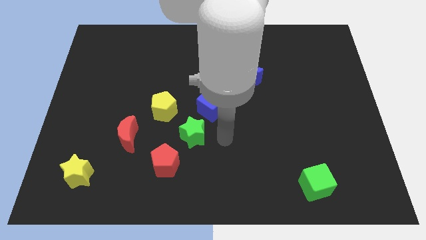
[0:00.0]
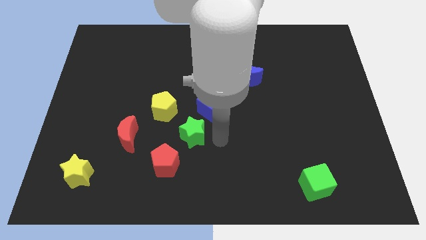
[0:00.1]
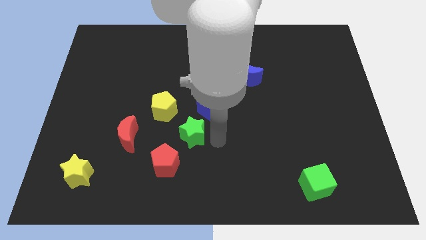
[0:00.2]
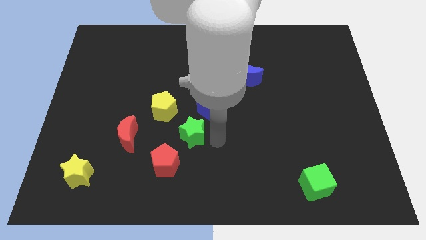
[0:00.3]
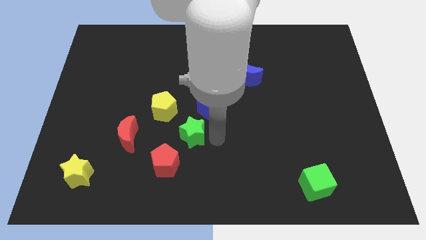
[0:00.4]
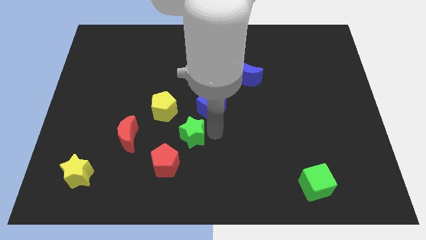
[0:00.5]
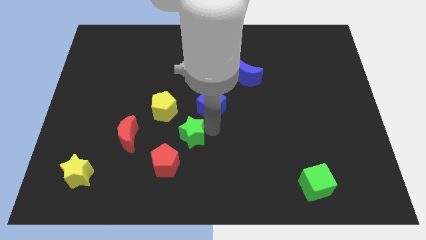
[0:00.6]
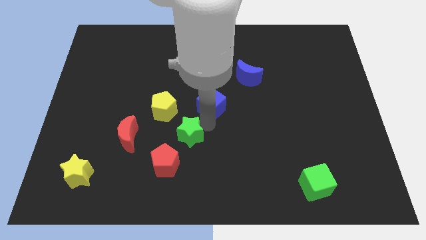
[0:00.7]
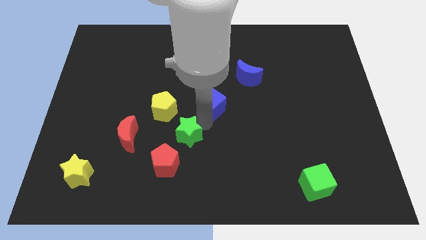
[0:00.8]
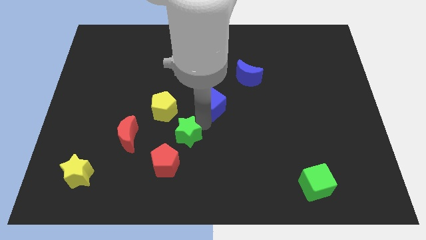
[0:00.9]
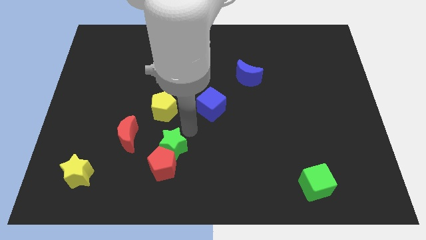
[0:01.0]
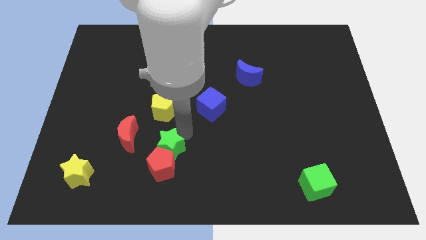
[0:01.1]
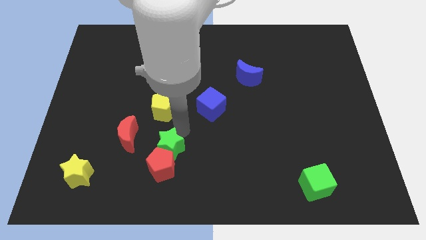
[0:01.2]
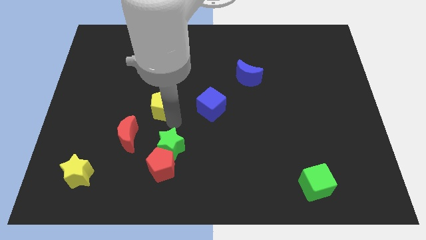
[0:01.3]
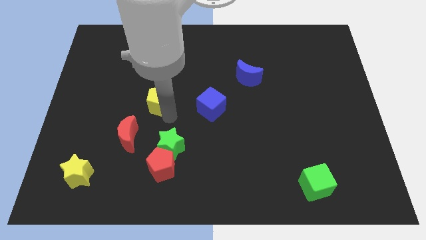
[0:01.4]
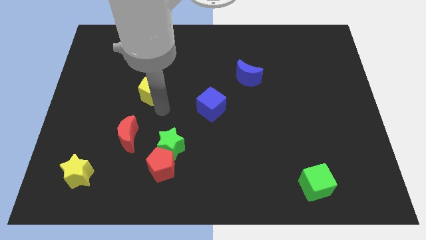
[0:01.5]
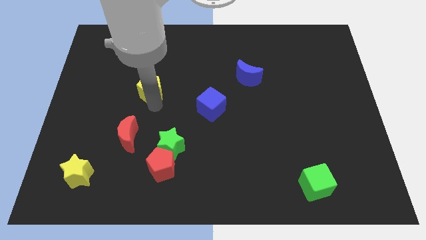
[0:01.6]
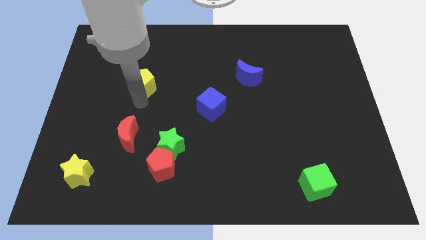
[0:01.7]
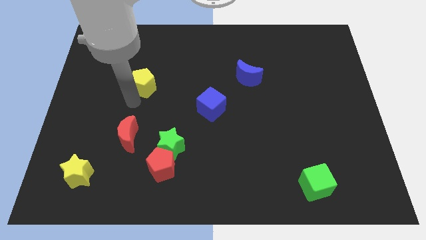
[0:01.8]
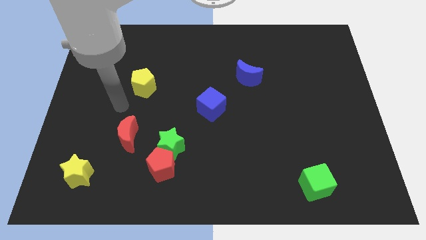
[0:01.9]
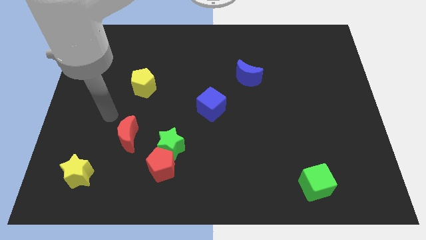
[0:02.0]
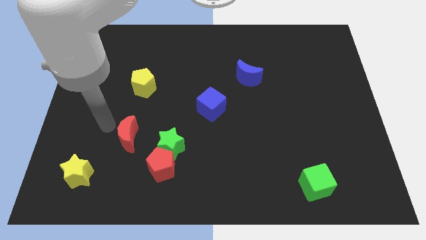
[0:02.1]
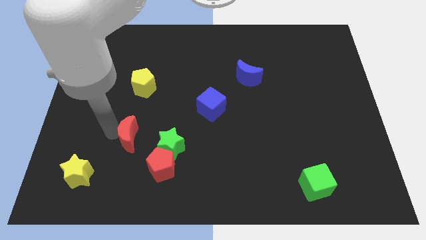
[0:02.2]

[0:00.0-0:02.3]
place the yellow pentagon above the red crescent

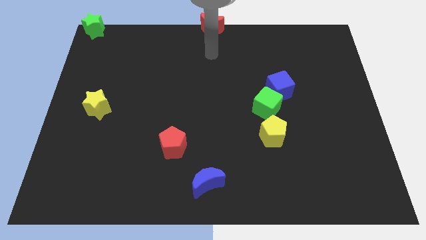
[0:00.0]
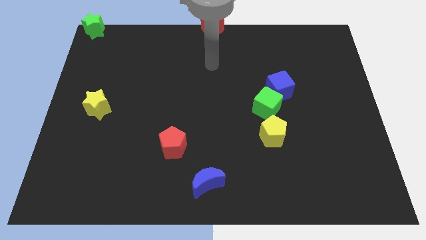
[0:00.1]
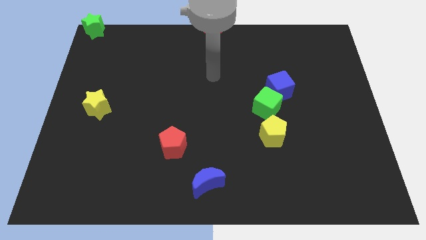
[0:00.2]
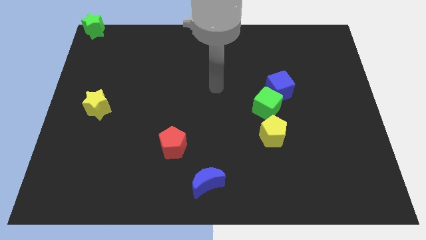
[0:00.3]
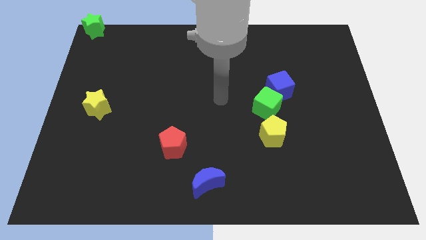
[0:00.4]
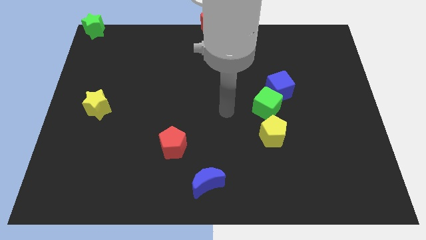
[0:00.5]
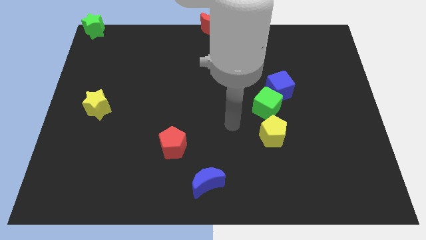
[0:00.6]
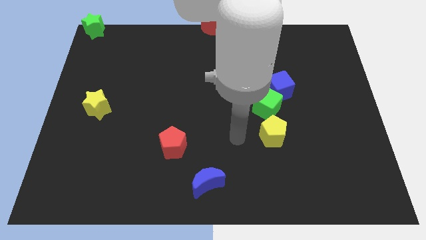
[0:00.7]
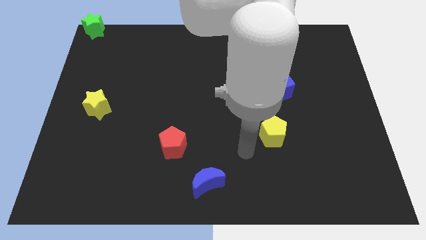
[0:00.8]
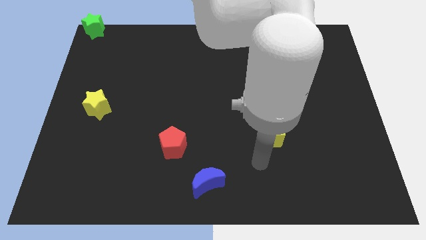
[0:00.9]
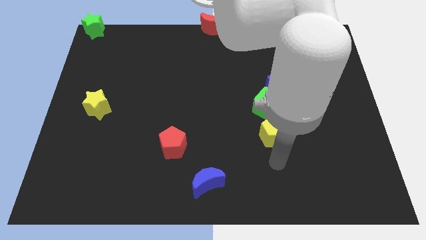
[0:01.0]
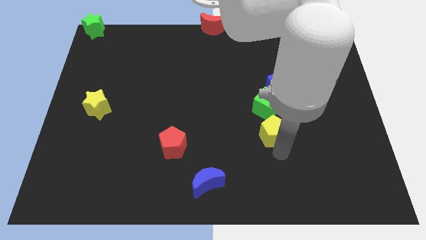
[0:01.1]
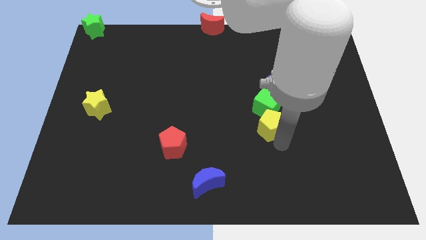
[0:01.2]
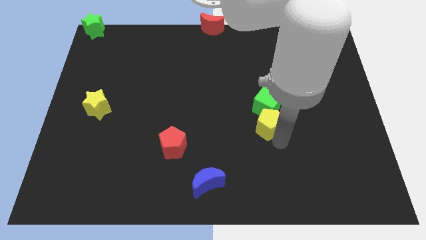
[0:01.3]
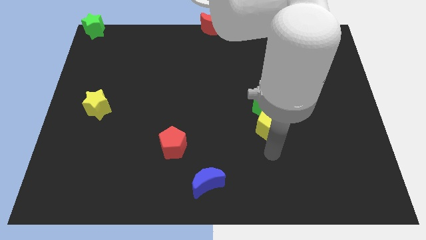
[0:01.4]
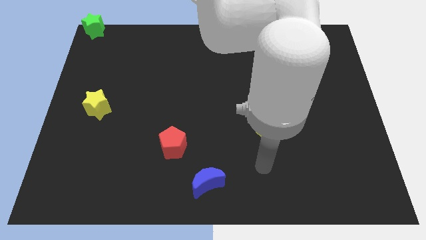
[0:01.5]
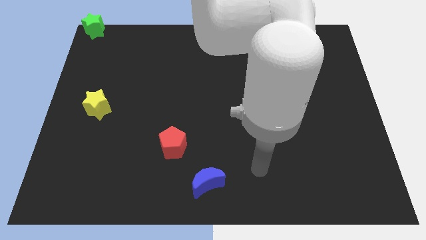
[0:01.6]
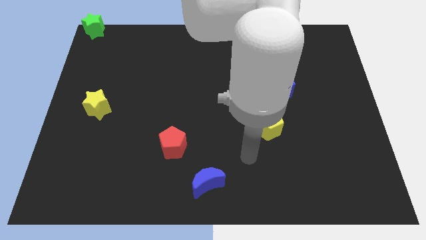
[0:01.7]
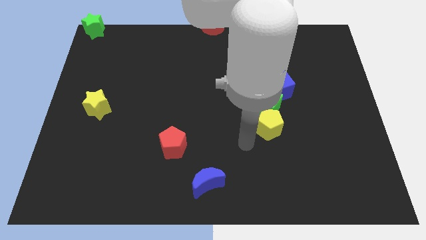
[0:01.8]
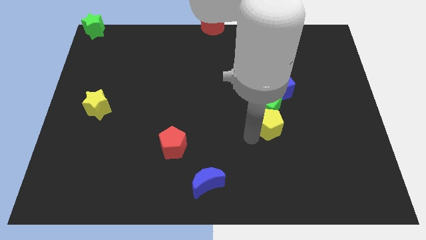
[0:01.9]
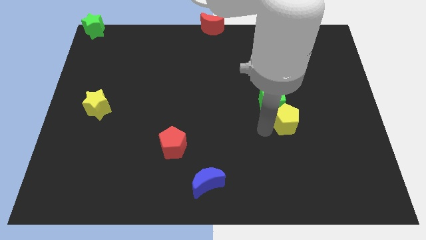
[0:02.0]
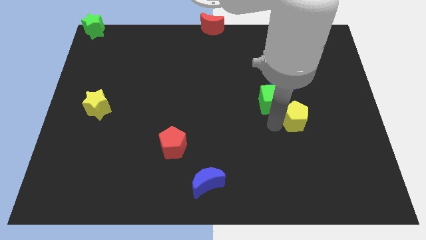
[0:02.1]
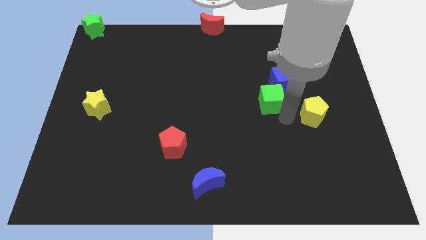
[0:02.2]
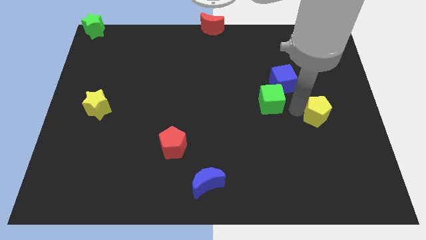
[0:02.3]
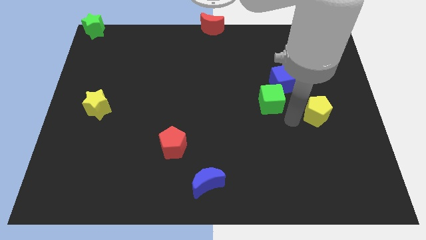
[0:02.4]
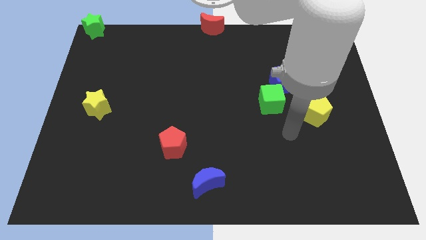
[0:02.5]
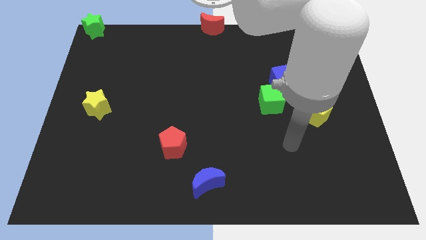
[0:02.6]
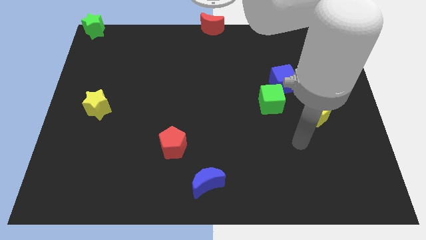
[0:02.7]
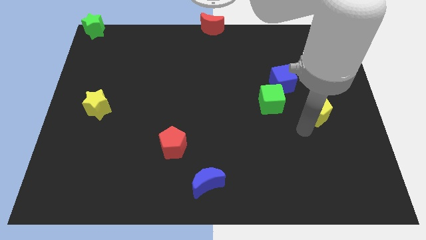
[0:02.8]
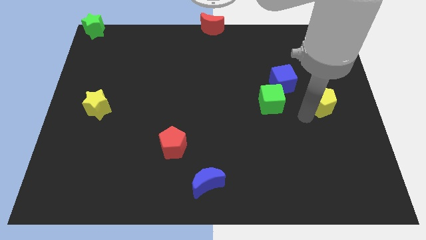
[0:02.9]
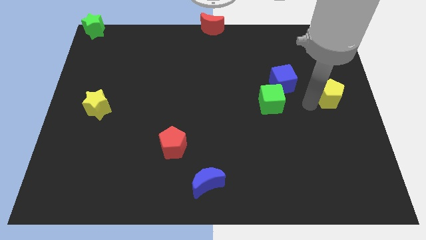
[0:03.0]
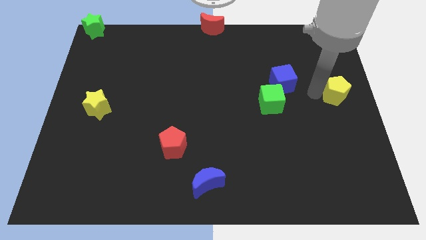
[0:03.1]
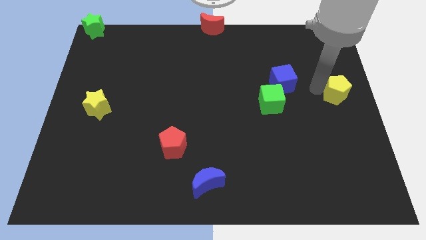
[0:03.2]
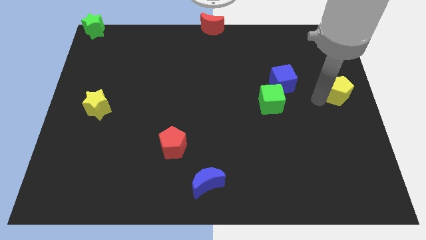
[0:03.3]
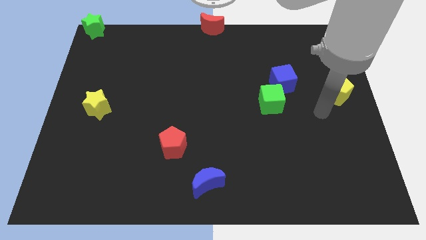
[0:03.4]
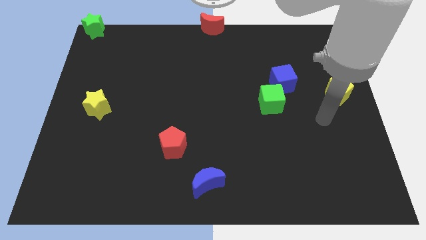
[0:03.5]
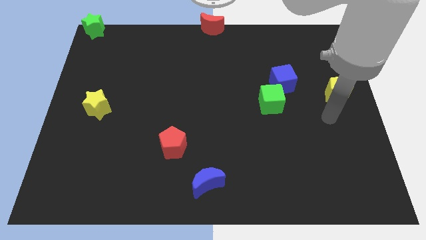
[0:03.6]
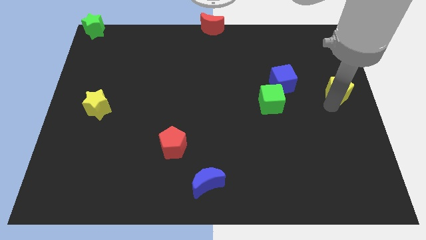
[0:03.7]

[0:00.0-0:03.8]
move the yellow pentagon towards the right center of the board

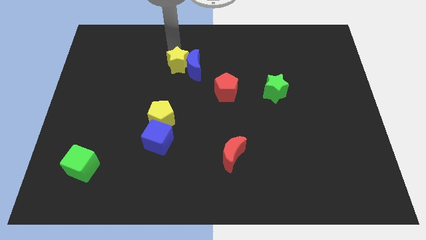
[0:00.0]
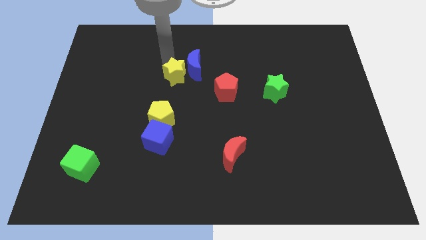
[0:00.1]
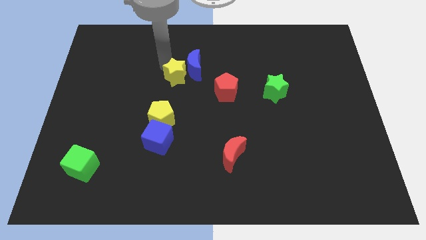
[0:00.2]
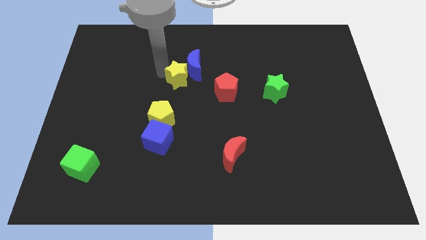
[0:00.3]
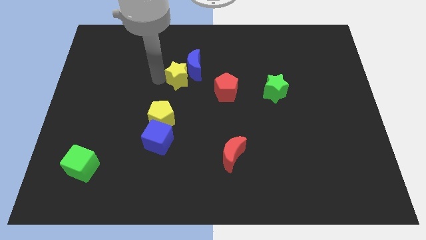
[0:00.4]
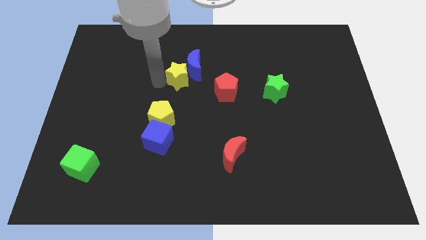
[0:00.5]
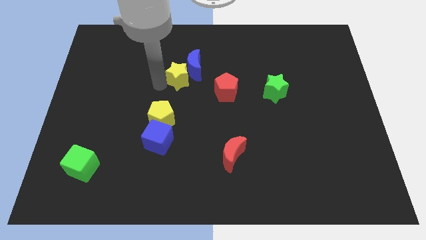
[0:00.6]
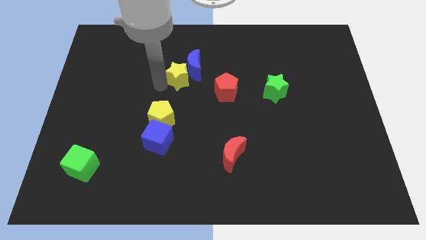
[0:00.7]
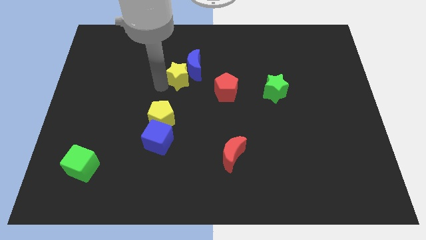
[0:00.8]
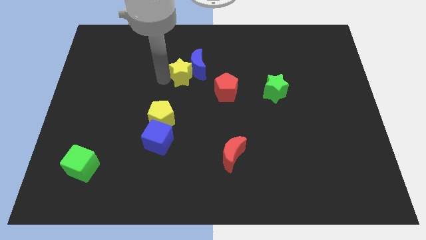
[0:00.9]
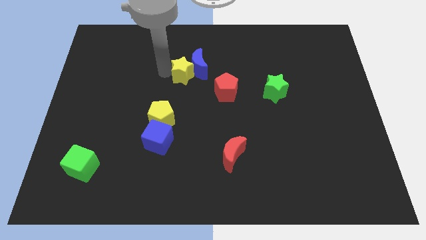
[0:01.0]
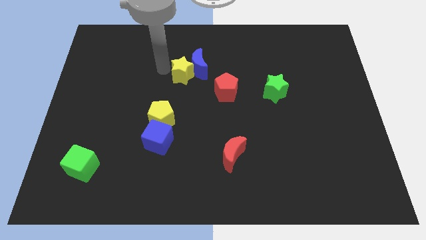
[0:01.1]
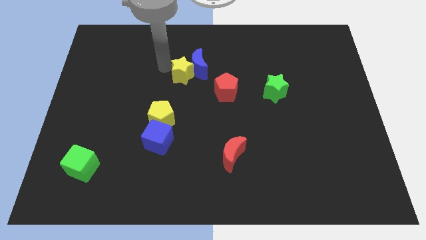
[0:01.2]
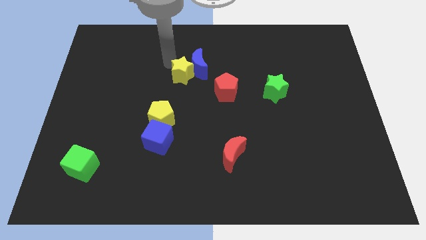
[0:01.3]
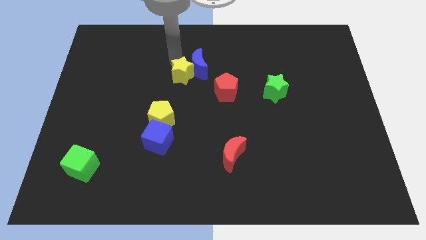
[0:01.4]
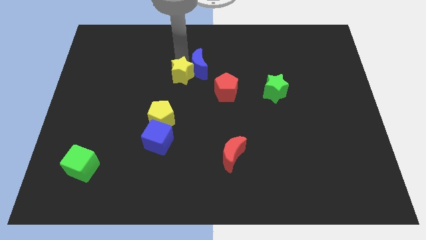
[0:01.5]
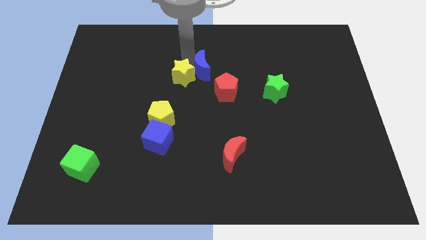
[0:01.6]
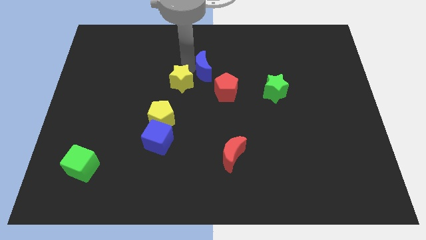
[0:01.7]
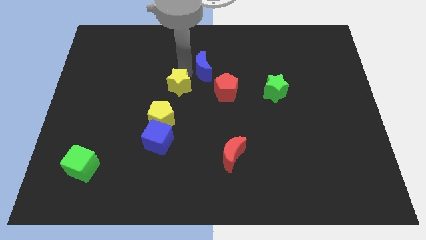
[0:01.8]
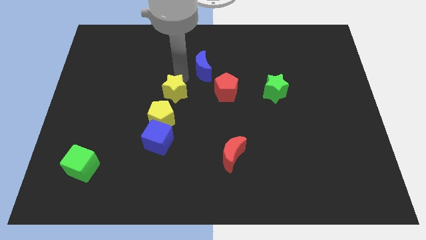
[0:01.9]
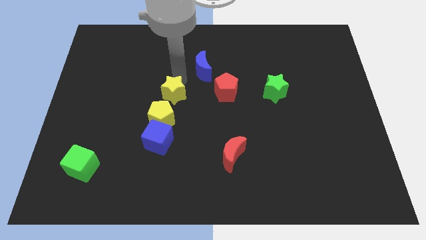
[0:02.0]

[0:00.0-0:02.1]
separate yellow star from the blue moon

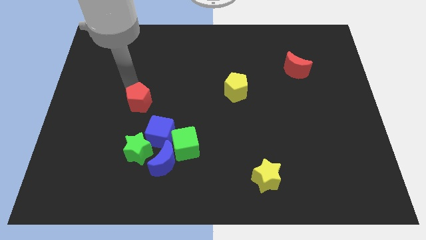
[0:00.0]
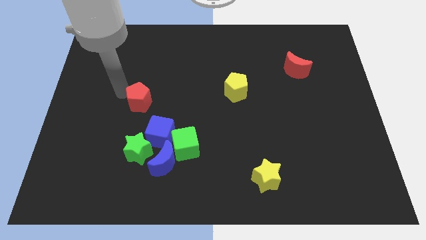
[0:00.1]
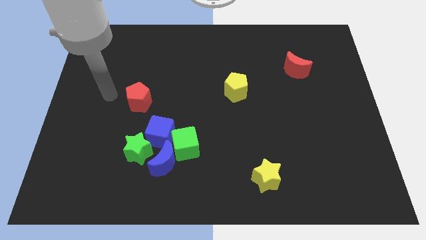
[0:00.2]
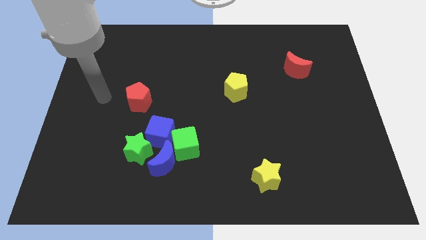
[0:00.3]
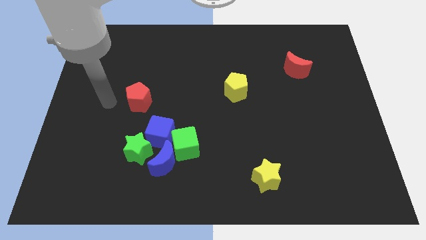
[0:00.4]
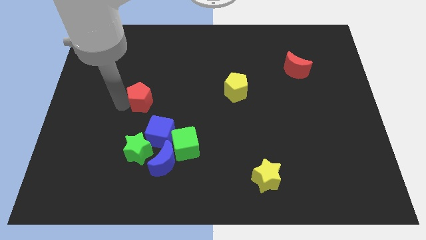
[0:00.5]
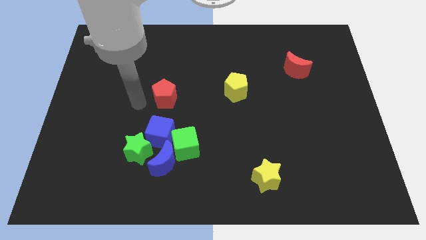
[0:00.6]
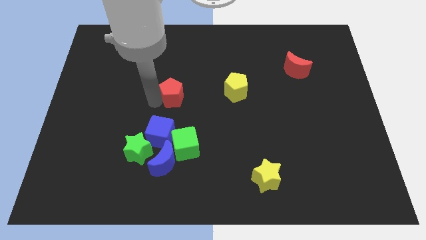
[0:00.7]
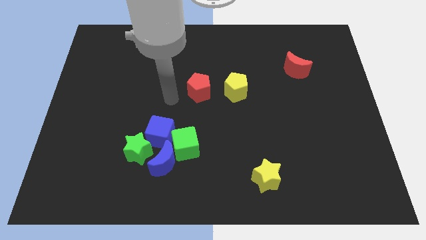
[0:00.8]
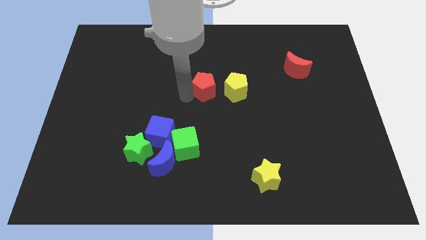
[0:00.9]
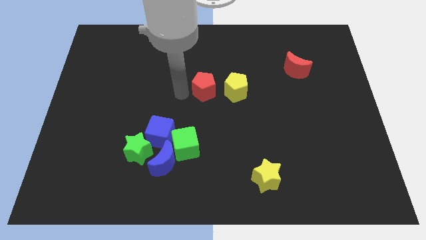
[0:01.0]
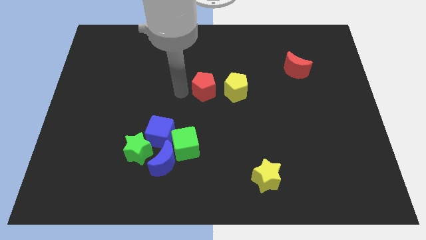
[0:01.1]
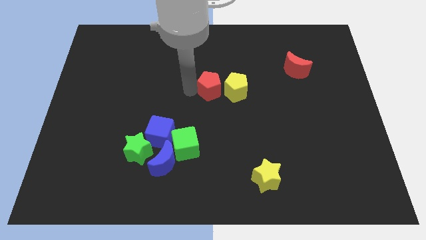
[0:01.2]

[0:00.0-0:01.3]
push the red pentagon left to the yellow pentagon
